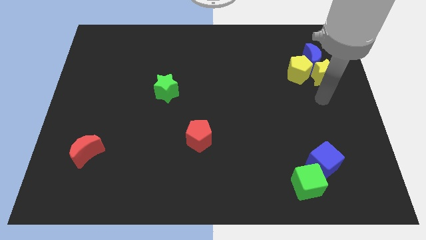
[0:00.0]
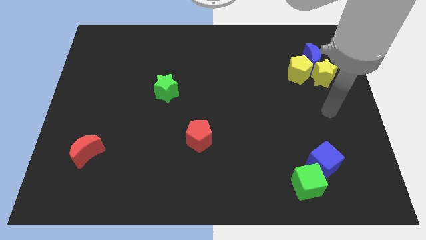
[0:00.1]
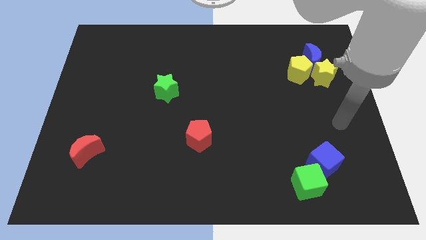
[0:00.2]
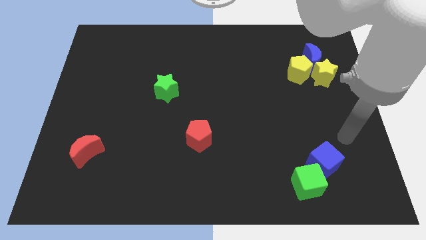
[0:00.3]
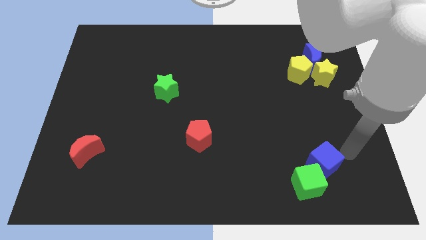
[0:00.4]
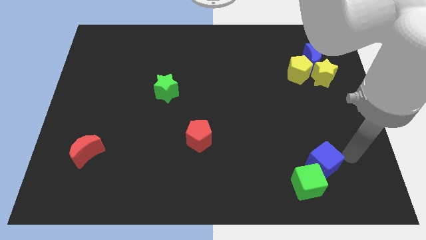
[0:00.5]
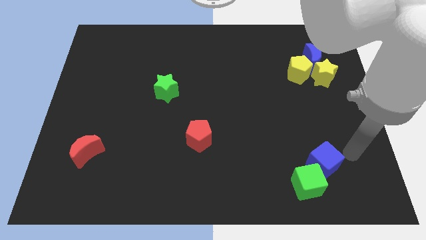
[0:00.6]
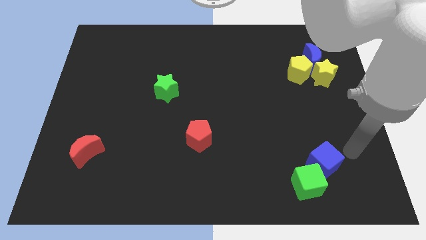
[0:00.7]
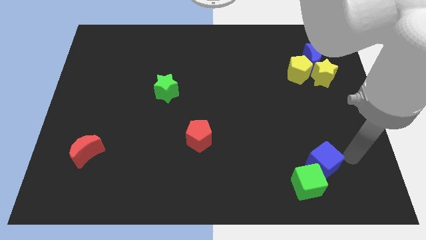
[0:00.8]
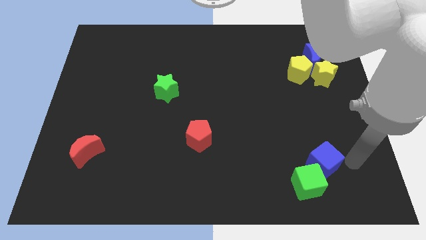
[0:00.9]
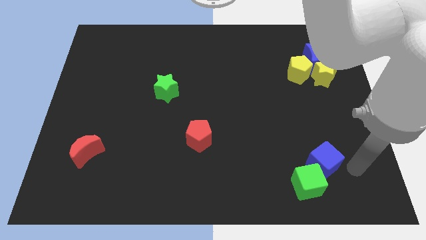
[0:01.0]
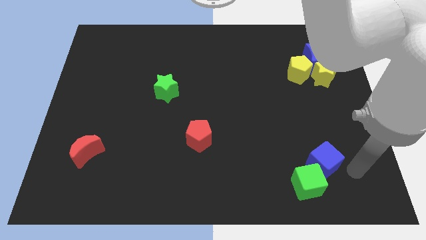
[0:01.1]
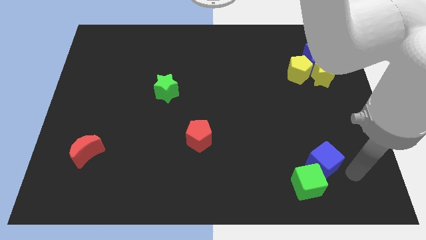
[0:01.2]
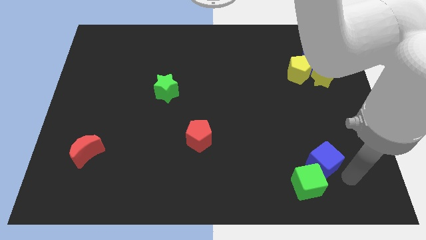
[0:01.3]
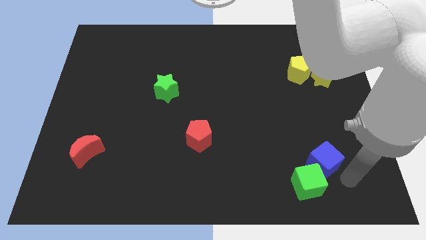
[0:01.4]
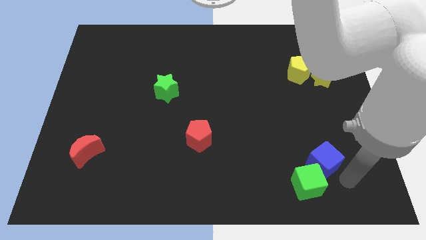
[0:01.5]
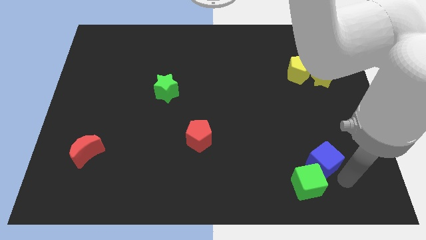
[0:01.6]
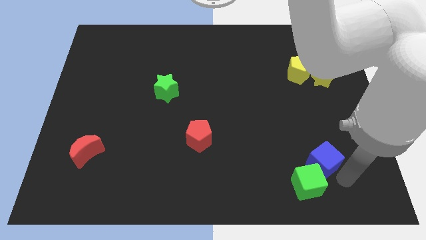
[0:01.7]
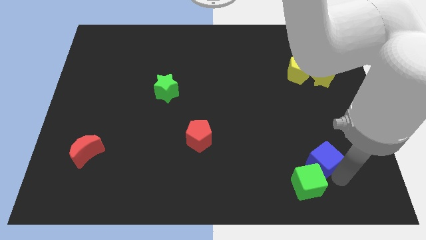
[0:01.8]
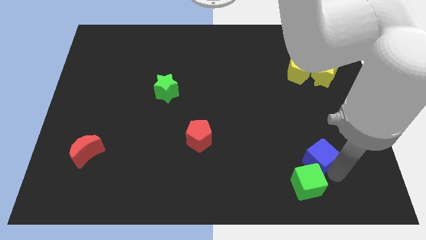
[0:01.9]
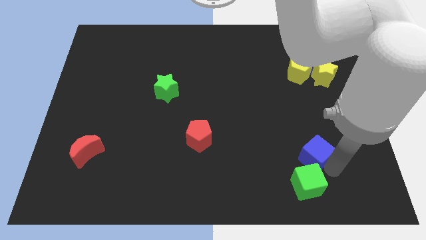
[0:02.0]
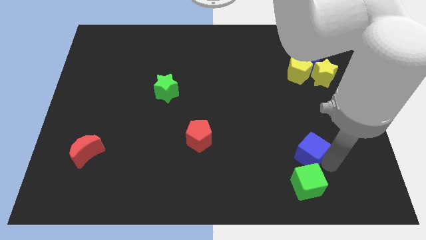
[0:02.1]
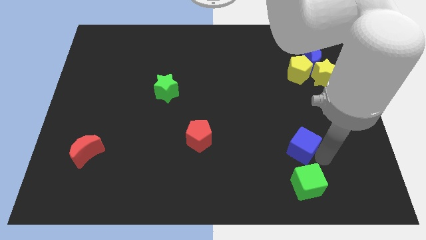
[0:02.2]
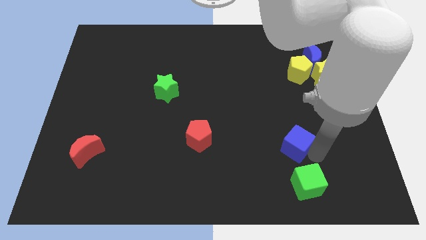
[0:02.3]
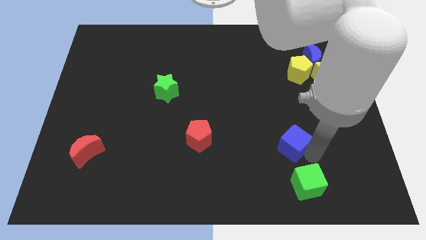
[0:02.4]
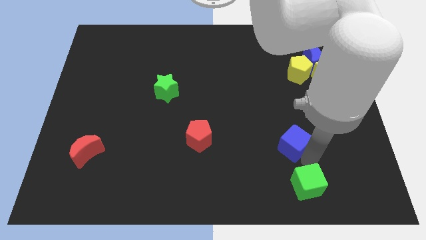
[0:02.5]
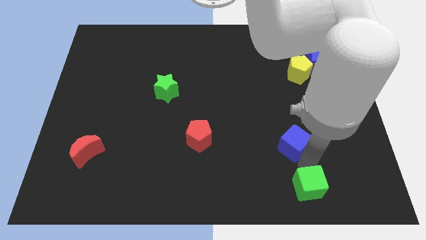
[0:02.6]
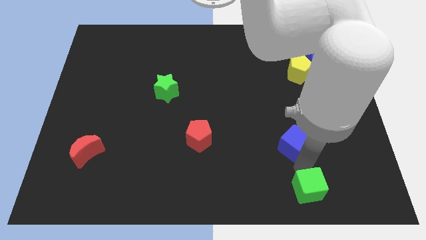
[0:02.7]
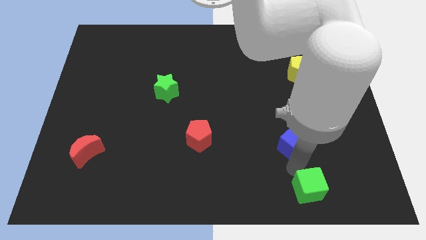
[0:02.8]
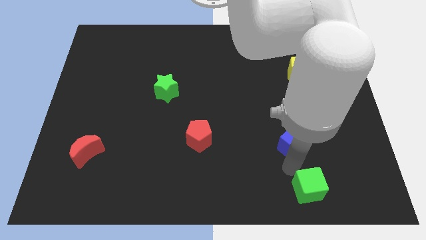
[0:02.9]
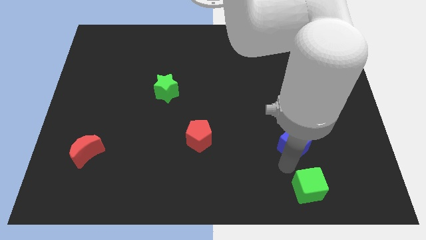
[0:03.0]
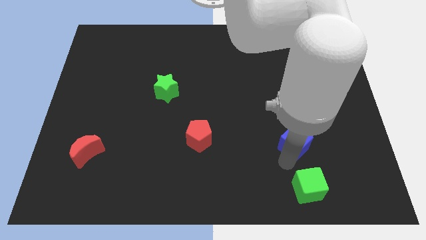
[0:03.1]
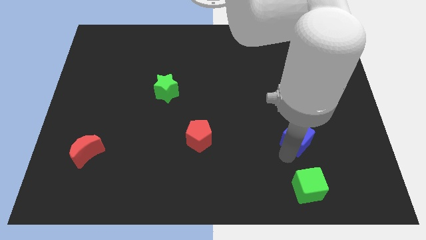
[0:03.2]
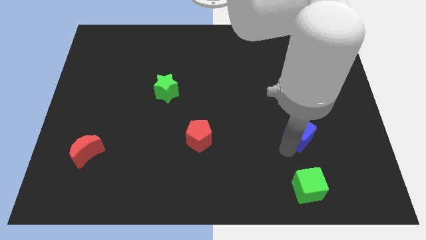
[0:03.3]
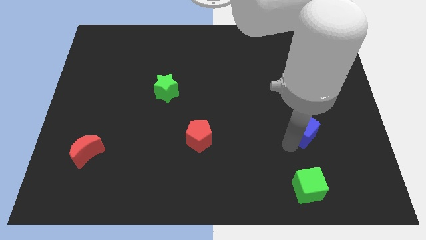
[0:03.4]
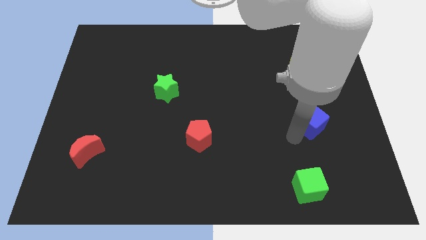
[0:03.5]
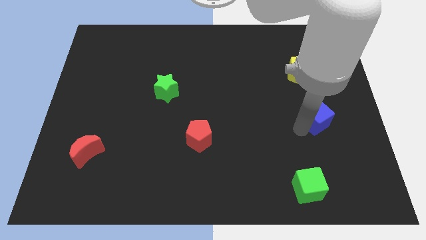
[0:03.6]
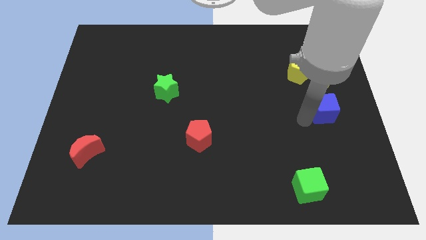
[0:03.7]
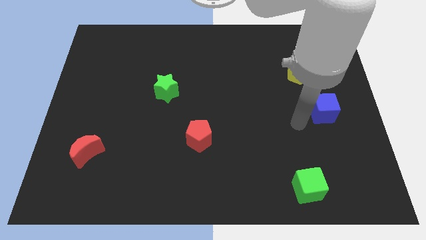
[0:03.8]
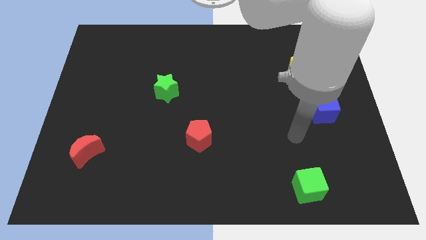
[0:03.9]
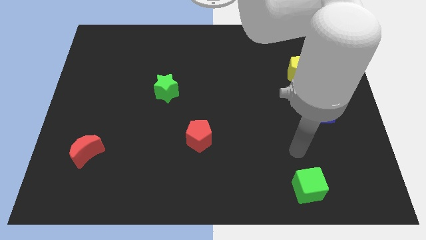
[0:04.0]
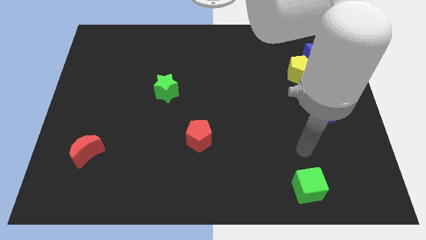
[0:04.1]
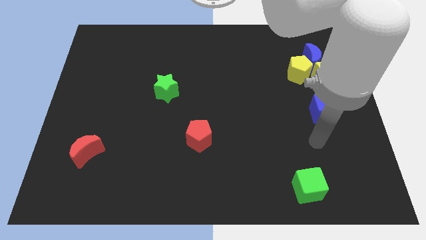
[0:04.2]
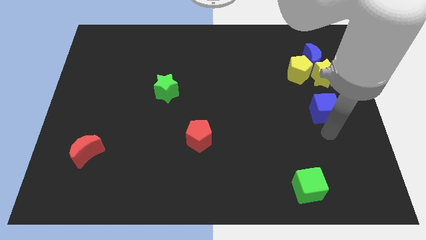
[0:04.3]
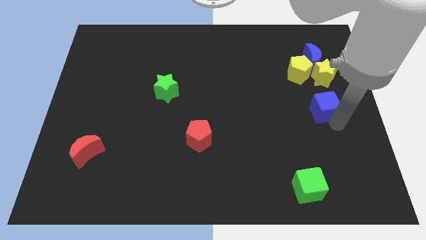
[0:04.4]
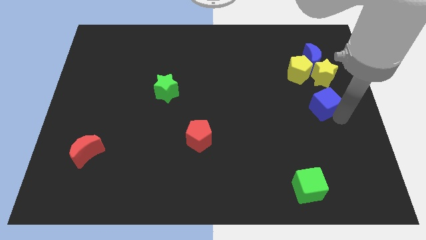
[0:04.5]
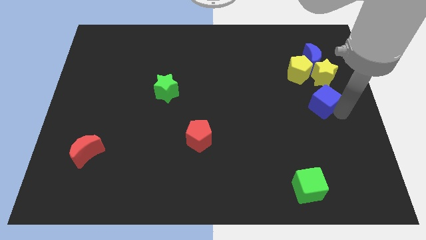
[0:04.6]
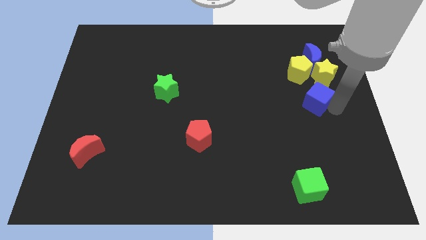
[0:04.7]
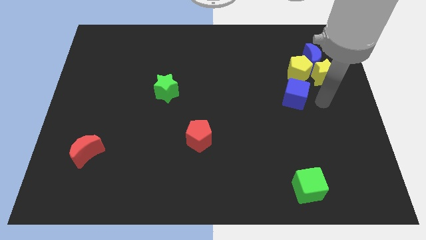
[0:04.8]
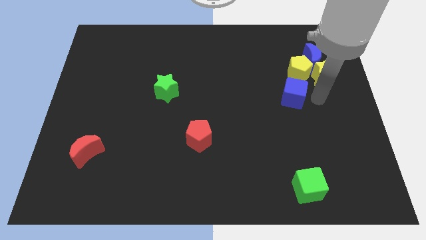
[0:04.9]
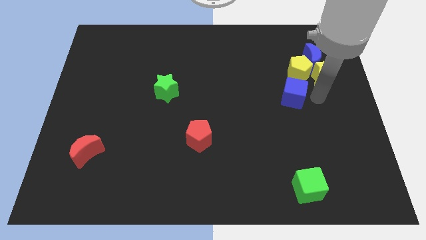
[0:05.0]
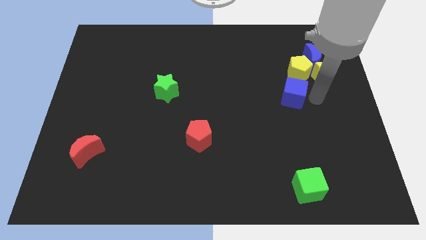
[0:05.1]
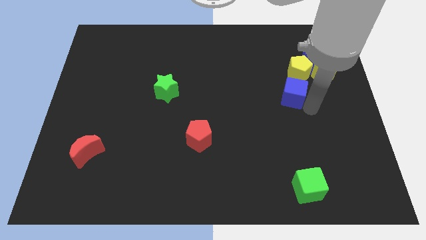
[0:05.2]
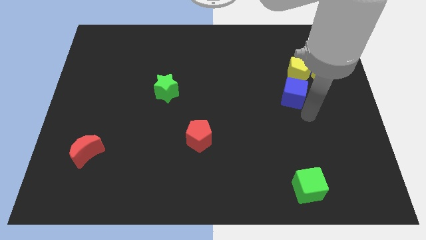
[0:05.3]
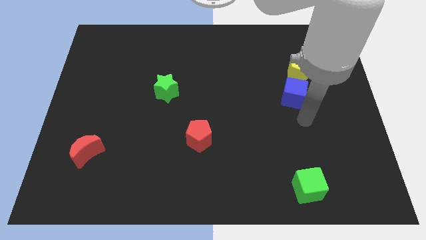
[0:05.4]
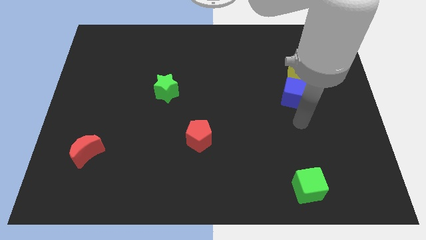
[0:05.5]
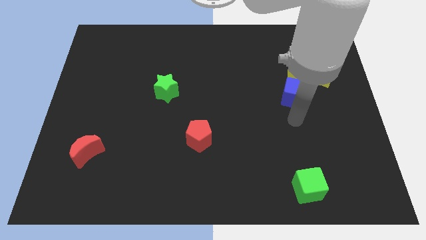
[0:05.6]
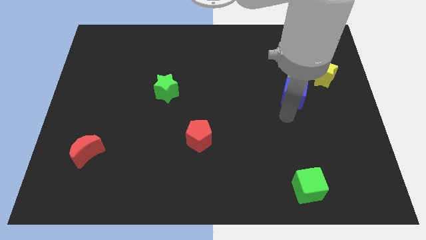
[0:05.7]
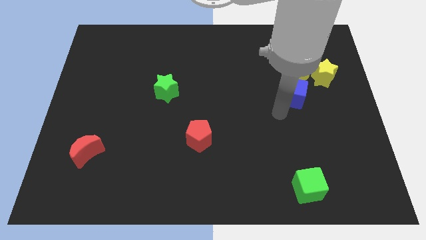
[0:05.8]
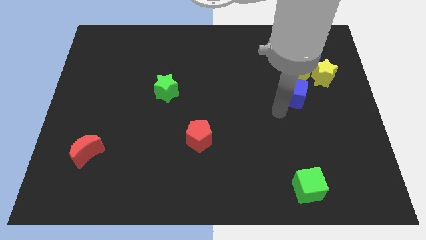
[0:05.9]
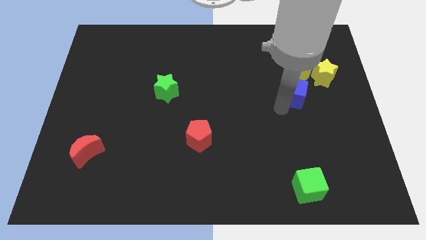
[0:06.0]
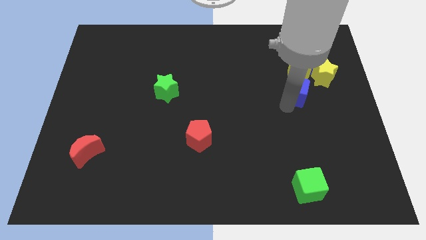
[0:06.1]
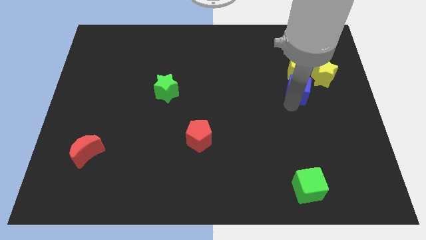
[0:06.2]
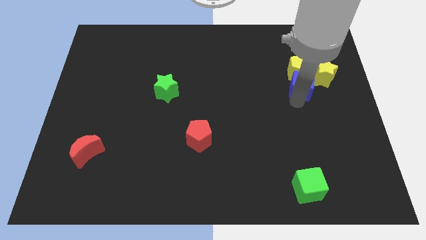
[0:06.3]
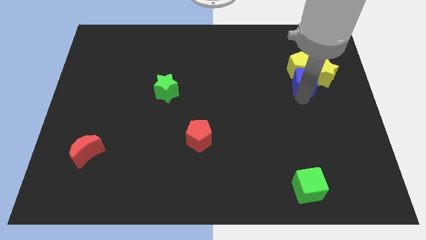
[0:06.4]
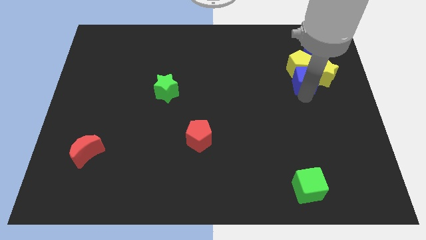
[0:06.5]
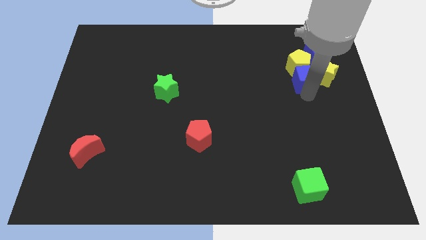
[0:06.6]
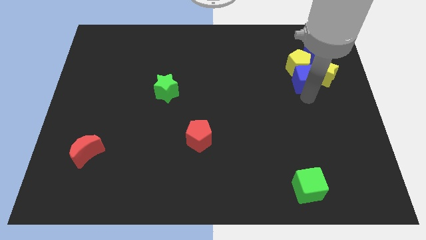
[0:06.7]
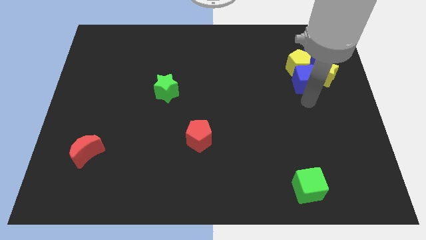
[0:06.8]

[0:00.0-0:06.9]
push the blue cube into the yellow pentagon

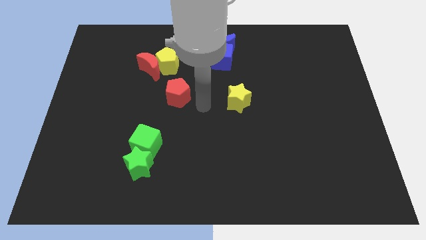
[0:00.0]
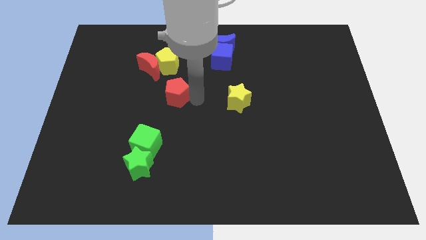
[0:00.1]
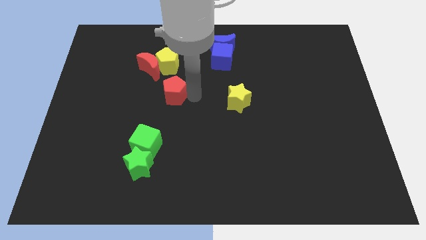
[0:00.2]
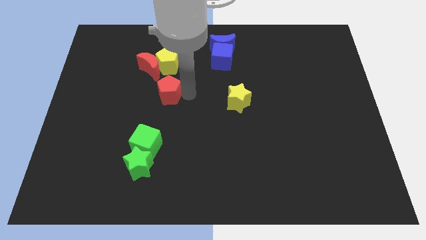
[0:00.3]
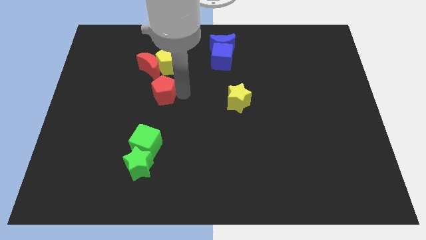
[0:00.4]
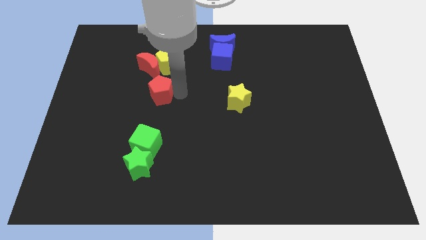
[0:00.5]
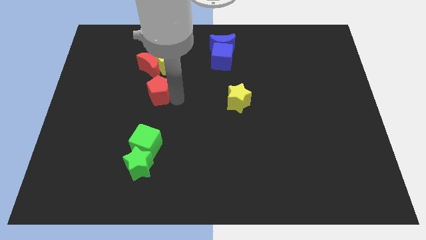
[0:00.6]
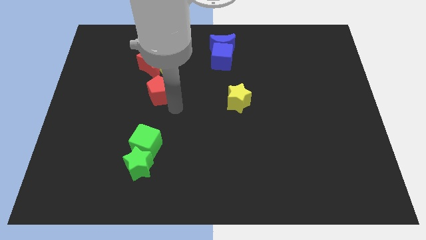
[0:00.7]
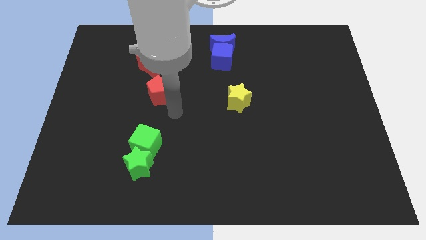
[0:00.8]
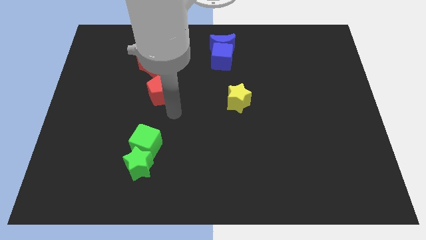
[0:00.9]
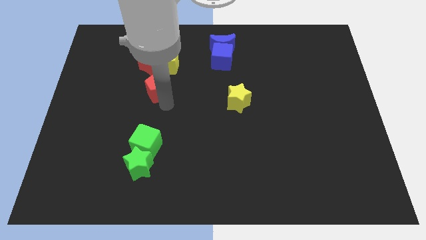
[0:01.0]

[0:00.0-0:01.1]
move red pentagon towards red moon

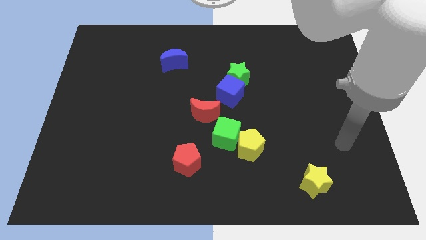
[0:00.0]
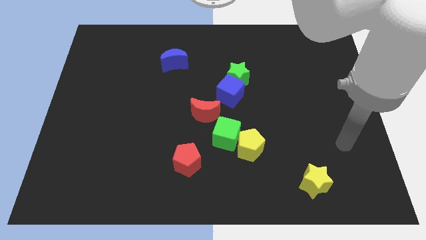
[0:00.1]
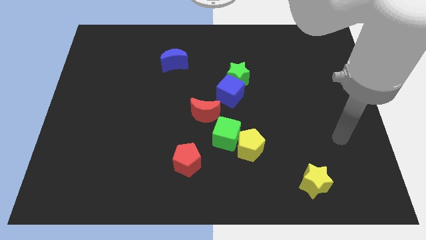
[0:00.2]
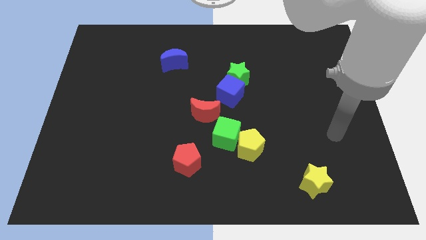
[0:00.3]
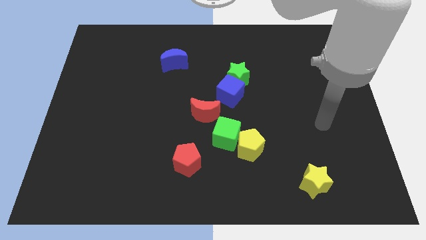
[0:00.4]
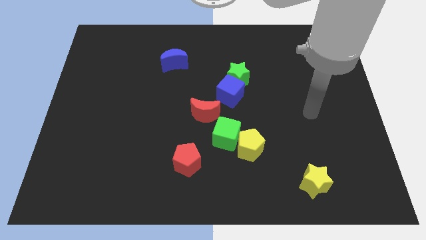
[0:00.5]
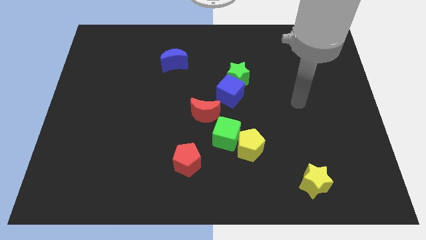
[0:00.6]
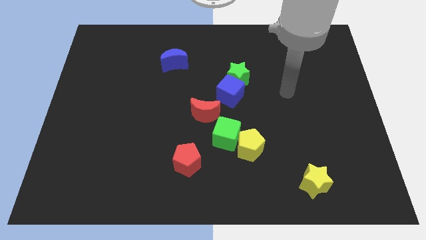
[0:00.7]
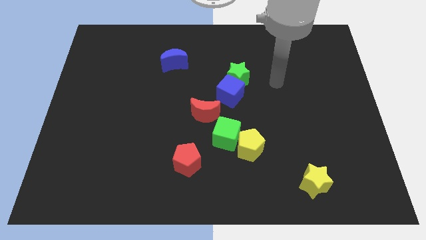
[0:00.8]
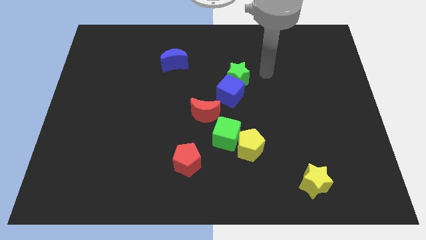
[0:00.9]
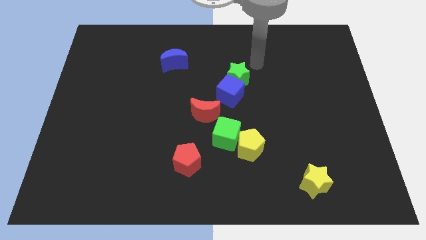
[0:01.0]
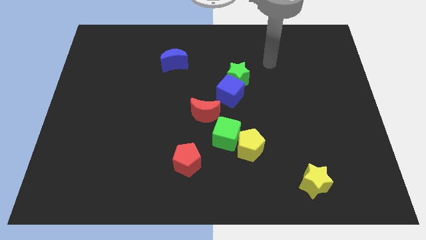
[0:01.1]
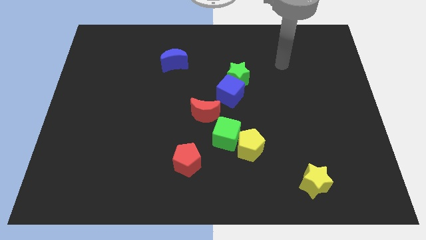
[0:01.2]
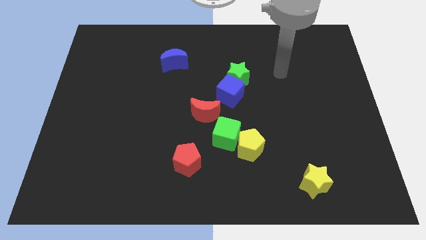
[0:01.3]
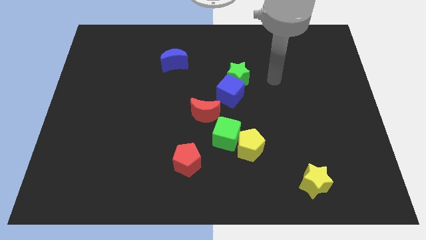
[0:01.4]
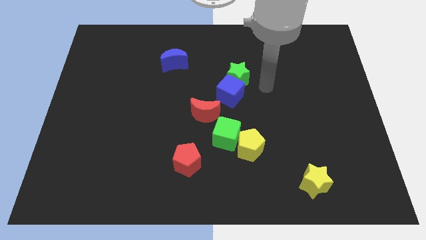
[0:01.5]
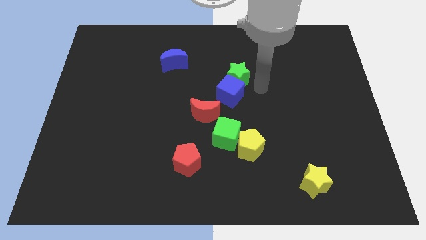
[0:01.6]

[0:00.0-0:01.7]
point the arm to the right of the blue cube
